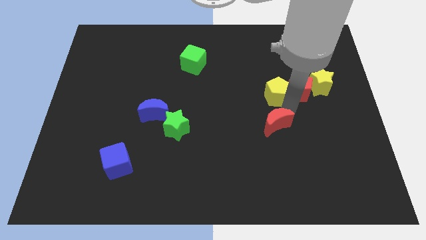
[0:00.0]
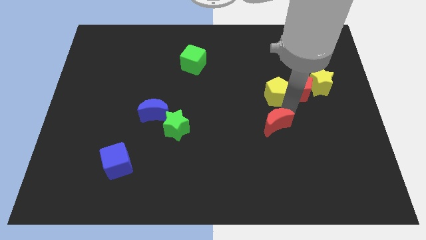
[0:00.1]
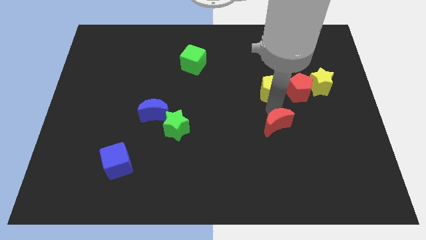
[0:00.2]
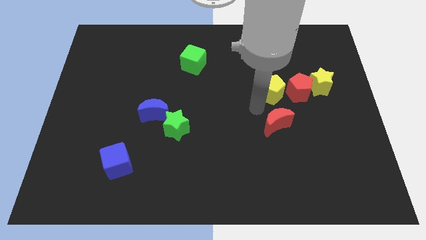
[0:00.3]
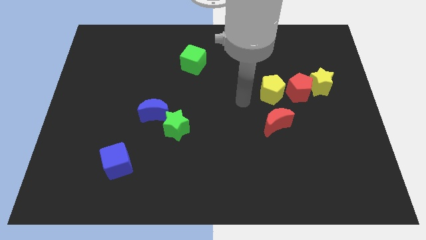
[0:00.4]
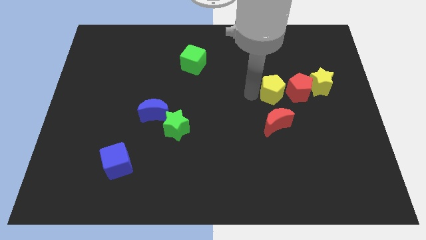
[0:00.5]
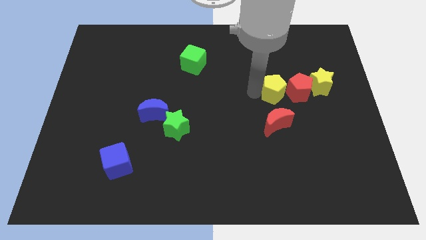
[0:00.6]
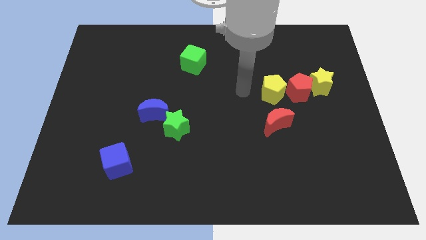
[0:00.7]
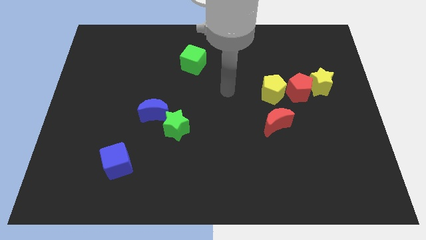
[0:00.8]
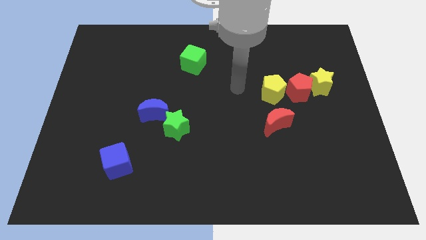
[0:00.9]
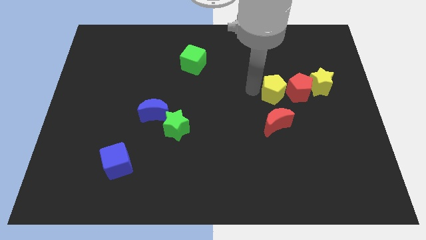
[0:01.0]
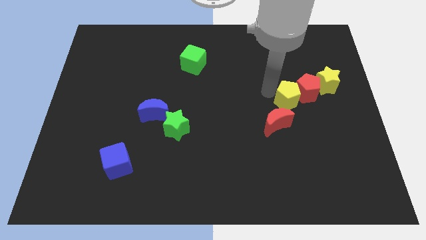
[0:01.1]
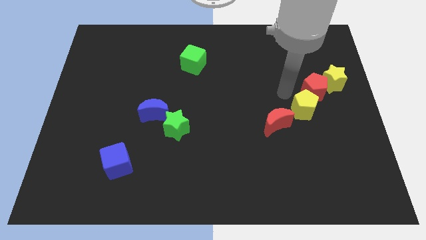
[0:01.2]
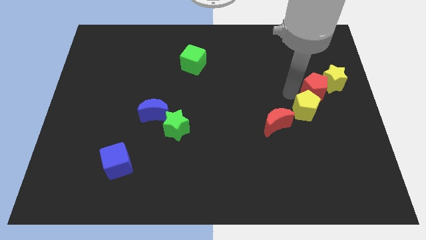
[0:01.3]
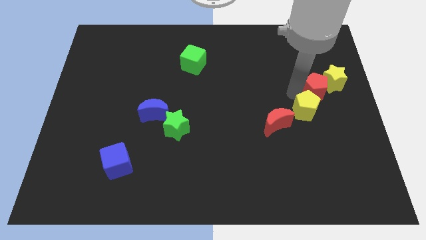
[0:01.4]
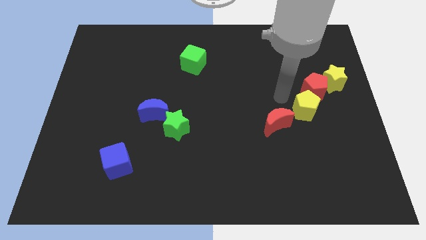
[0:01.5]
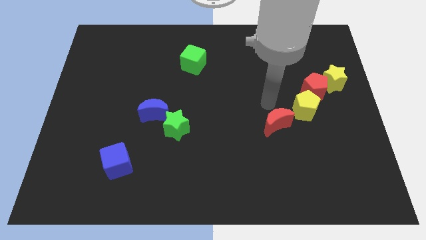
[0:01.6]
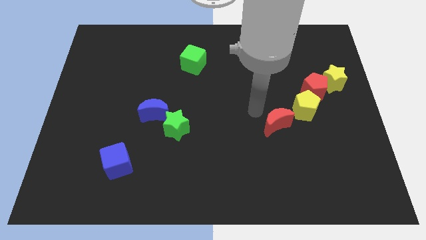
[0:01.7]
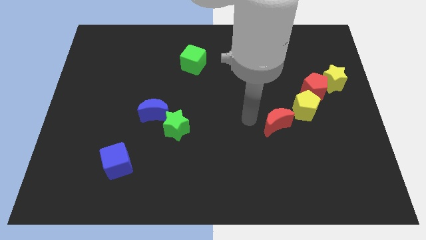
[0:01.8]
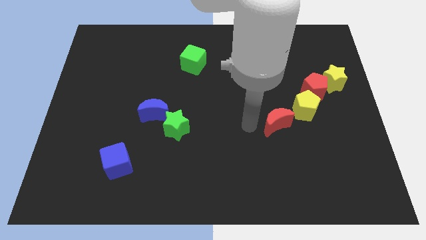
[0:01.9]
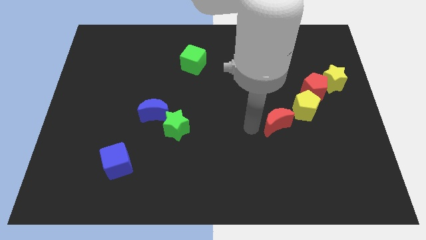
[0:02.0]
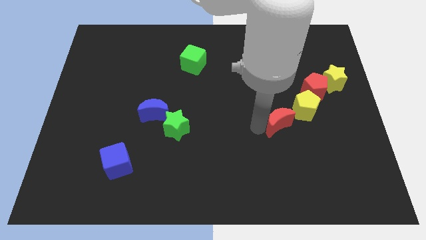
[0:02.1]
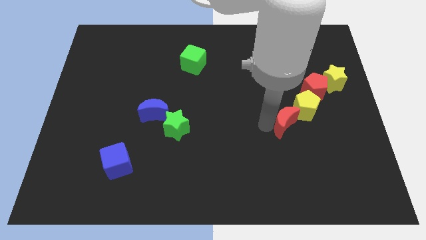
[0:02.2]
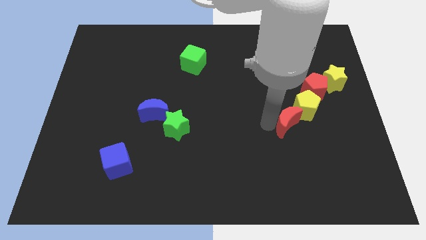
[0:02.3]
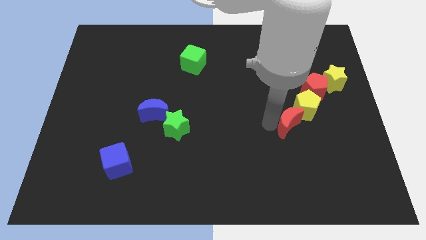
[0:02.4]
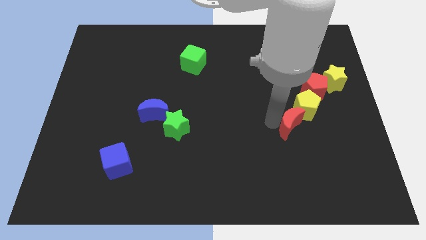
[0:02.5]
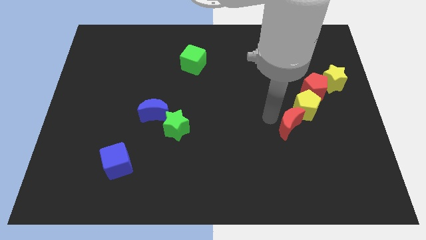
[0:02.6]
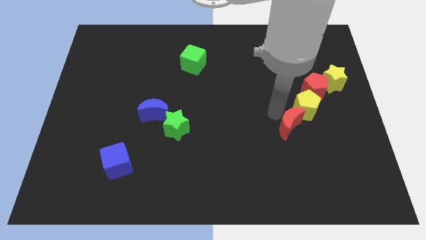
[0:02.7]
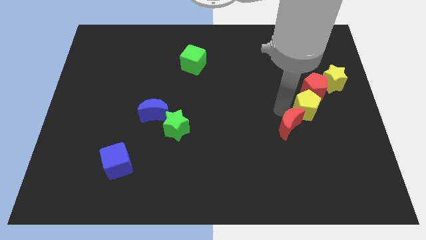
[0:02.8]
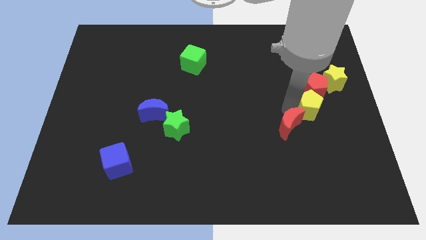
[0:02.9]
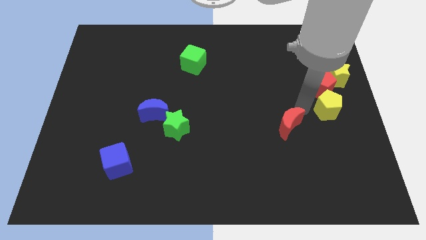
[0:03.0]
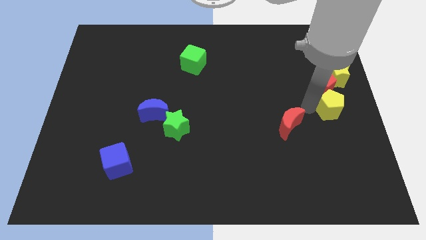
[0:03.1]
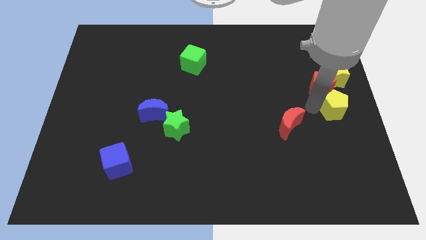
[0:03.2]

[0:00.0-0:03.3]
slide the yellow pentagon towards the center right of the board

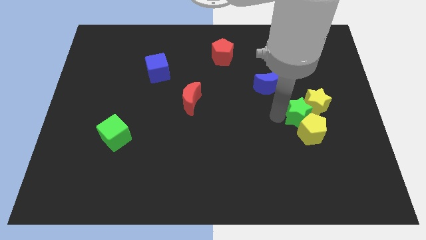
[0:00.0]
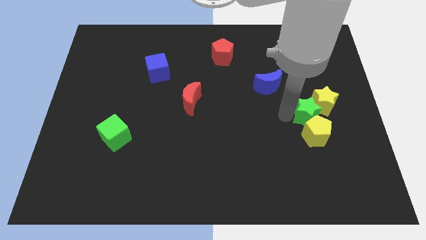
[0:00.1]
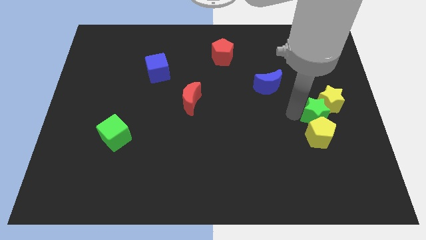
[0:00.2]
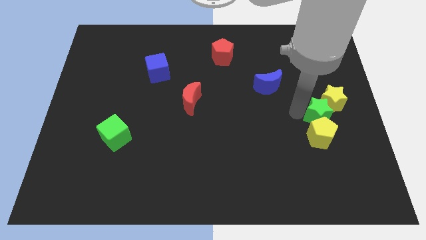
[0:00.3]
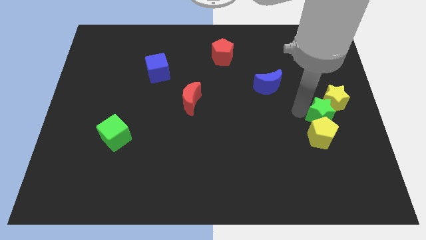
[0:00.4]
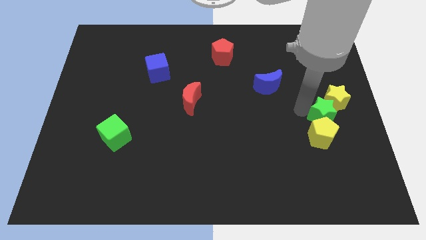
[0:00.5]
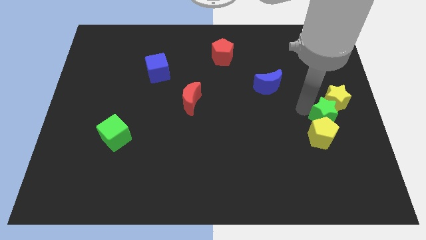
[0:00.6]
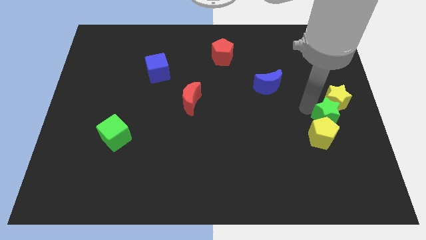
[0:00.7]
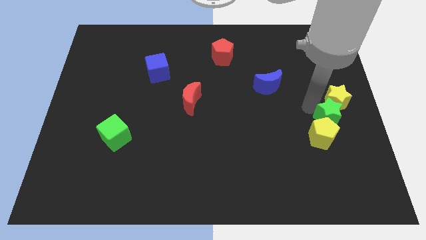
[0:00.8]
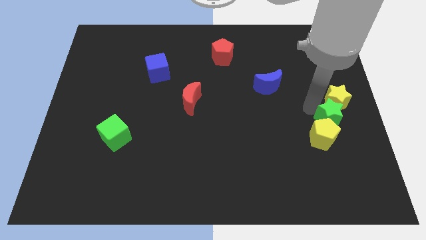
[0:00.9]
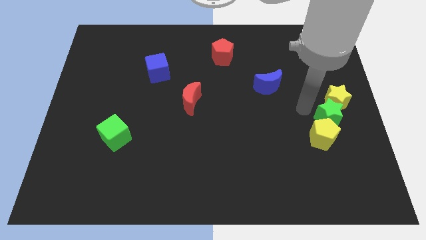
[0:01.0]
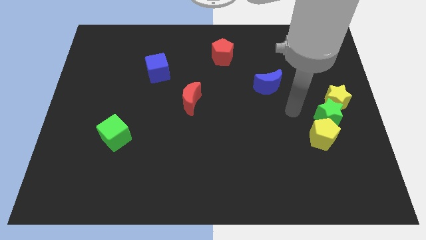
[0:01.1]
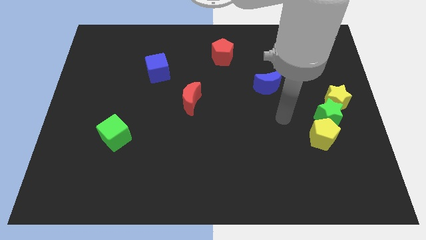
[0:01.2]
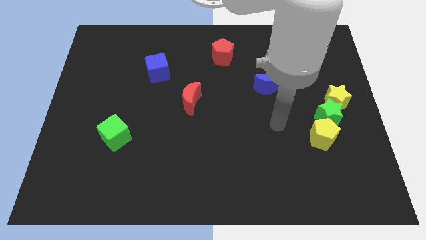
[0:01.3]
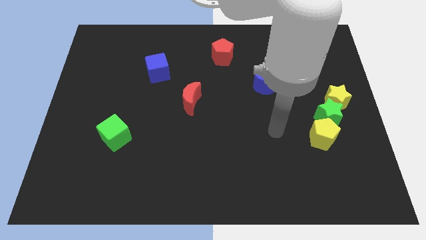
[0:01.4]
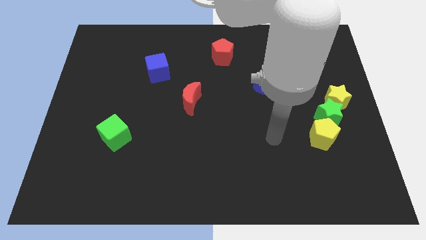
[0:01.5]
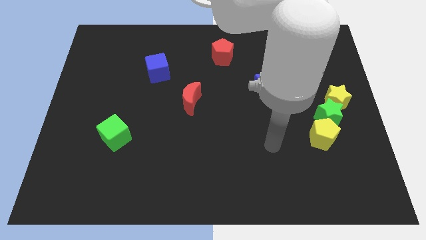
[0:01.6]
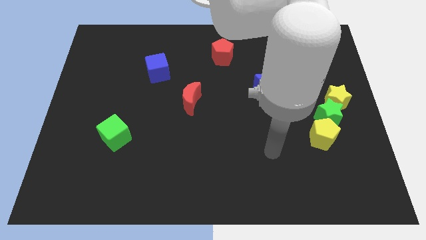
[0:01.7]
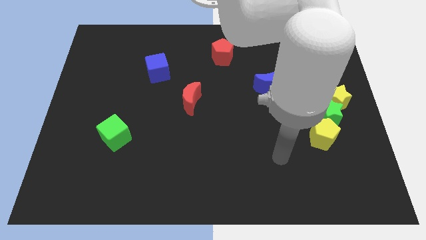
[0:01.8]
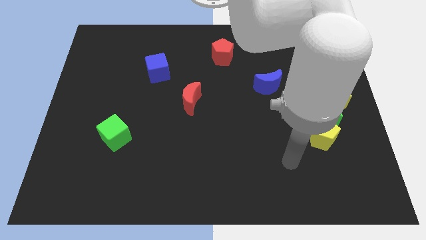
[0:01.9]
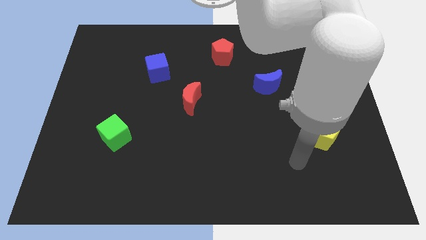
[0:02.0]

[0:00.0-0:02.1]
place green star in between yellow star and yellow pentagon

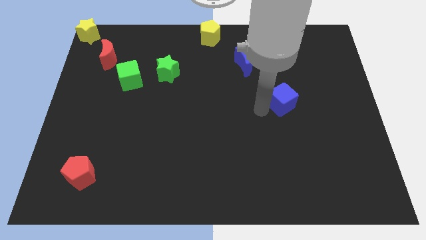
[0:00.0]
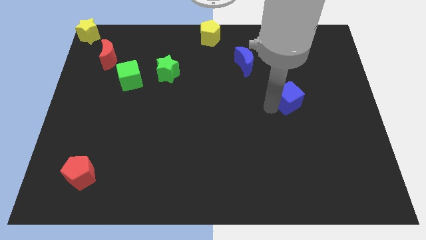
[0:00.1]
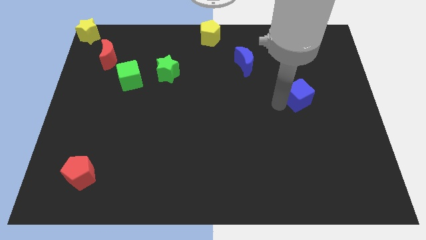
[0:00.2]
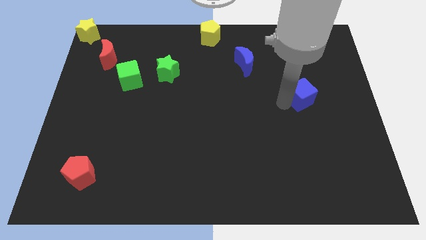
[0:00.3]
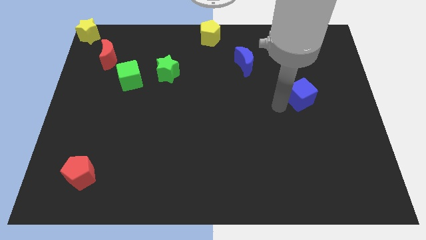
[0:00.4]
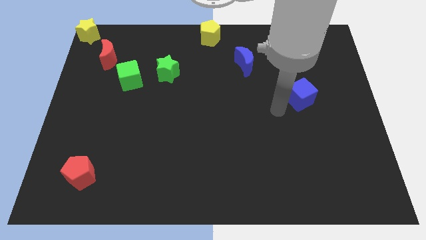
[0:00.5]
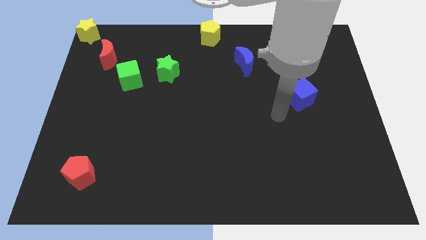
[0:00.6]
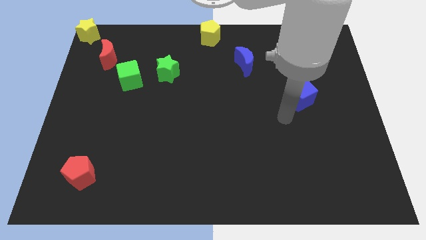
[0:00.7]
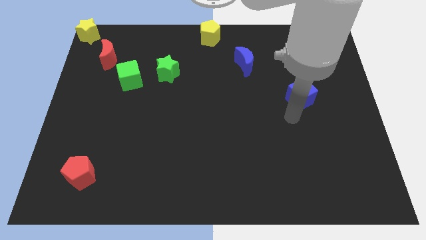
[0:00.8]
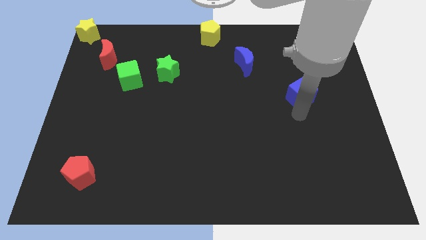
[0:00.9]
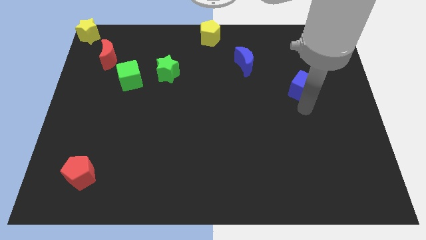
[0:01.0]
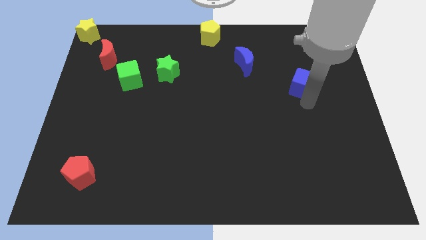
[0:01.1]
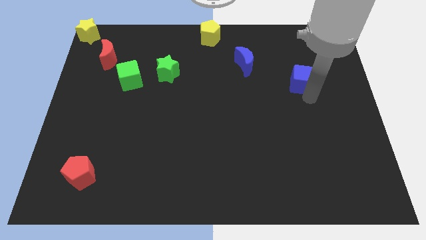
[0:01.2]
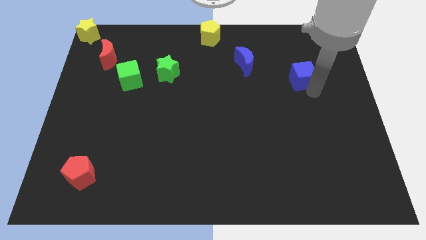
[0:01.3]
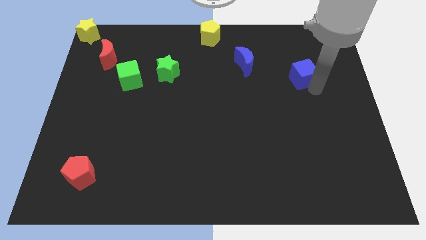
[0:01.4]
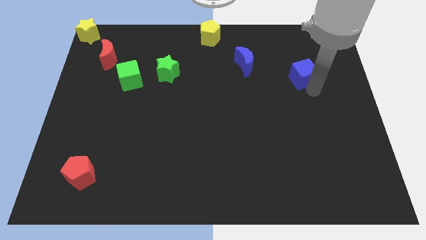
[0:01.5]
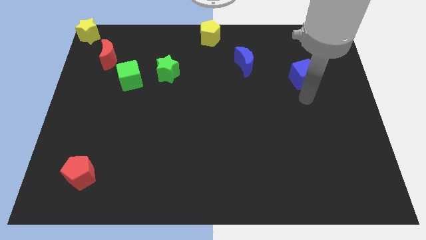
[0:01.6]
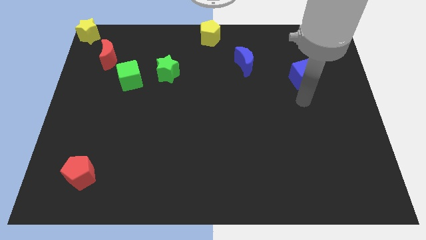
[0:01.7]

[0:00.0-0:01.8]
push the blue cube slightly upwards

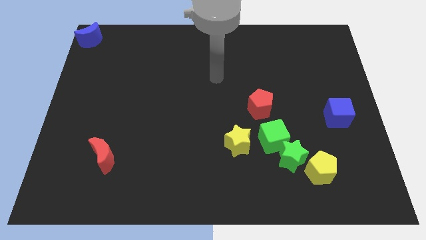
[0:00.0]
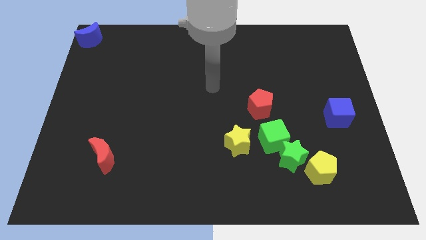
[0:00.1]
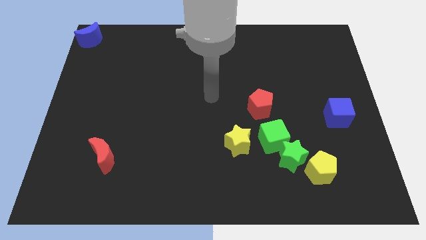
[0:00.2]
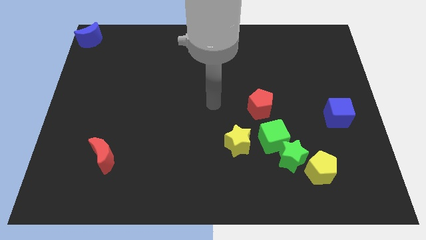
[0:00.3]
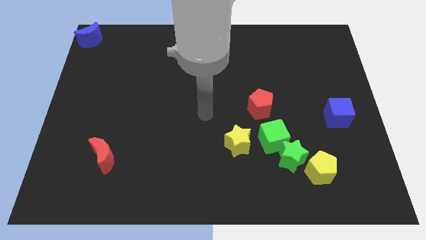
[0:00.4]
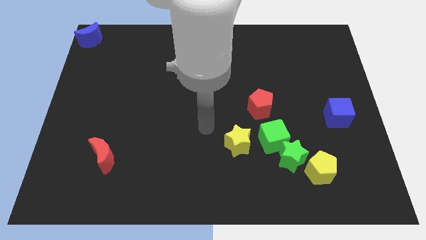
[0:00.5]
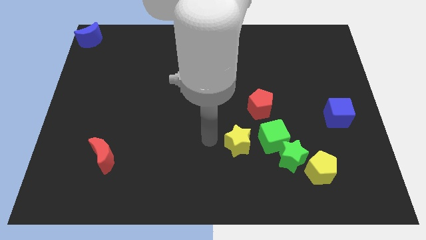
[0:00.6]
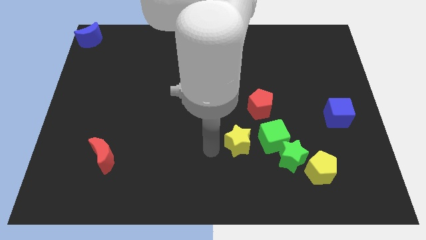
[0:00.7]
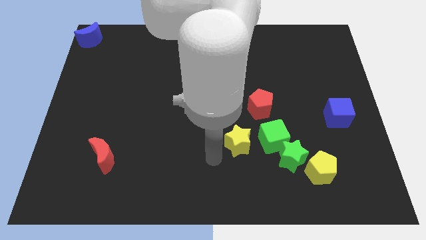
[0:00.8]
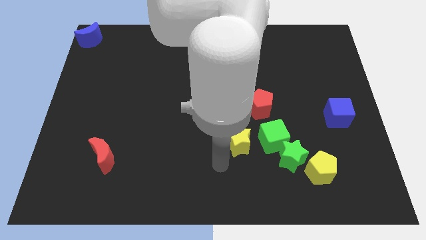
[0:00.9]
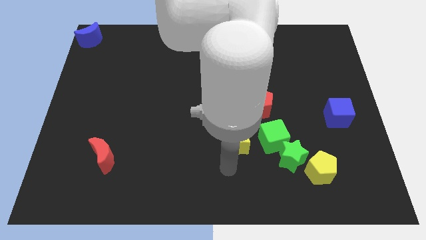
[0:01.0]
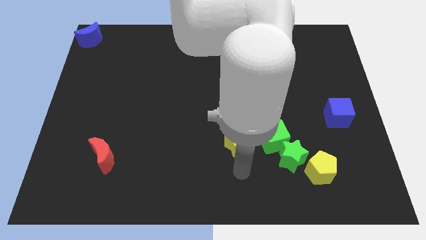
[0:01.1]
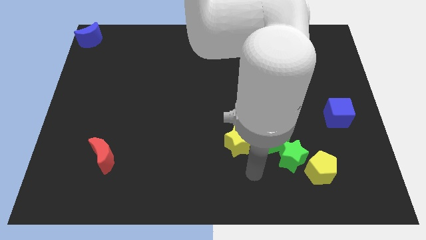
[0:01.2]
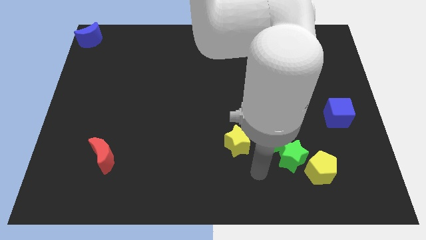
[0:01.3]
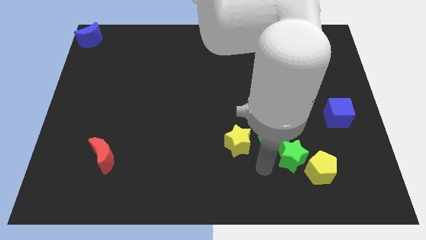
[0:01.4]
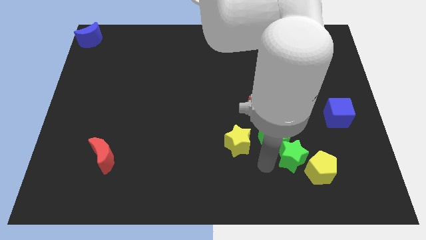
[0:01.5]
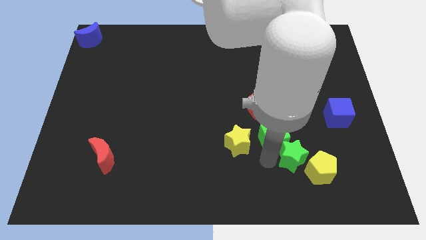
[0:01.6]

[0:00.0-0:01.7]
point the arm left side of the green star

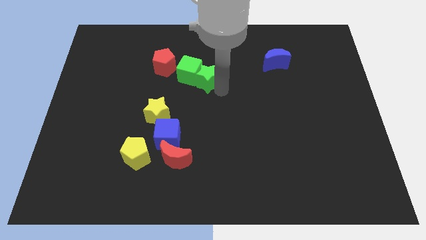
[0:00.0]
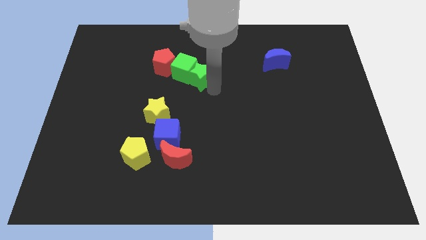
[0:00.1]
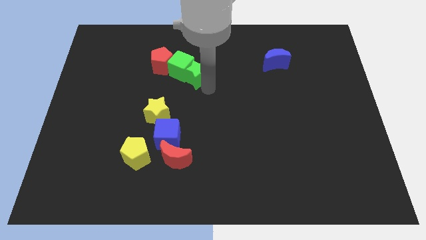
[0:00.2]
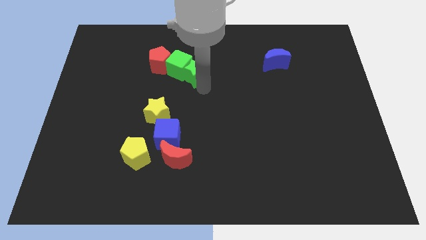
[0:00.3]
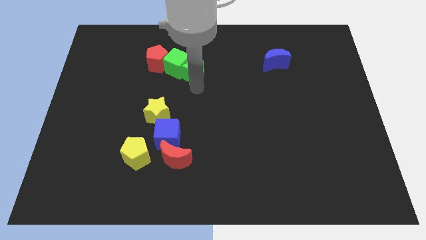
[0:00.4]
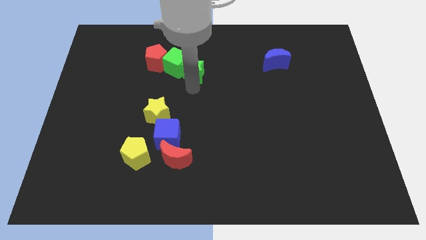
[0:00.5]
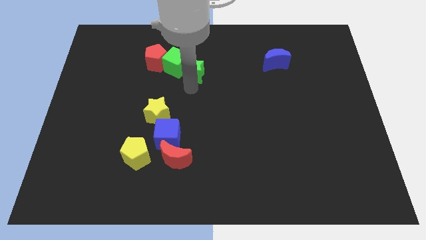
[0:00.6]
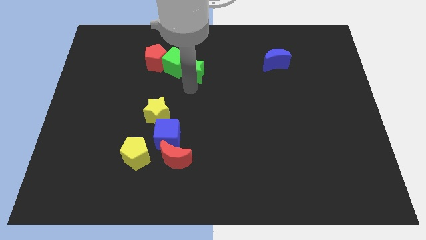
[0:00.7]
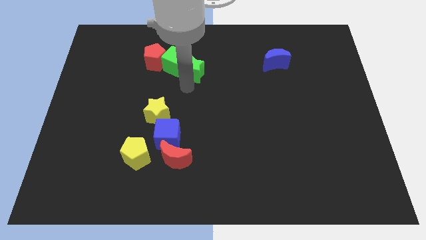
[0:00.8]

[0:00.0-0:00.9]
push green cubes in red pentagon
